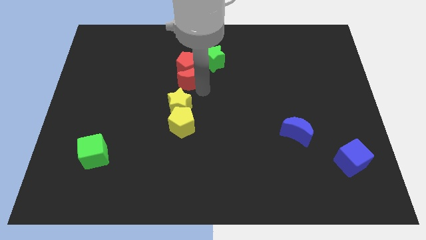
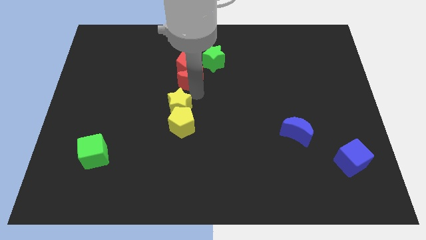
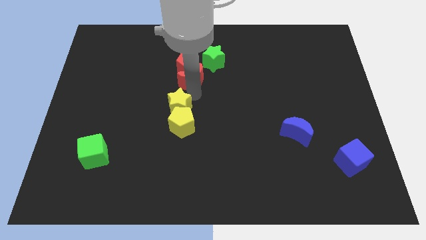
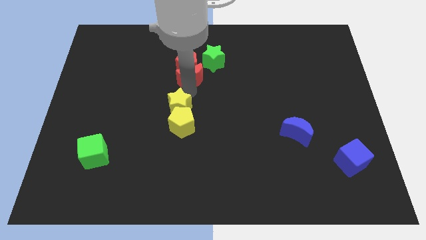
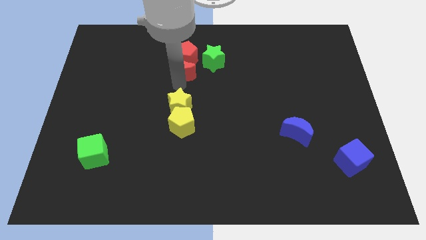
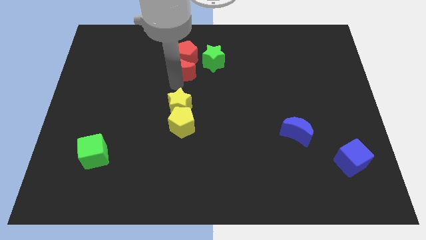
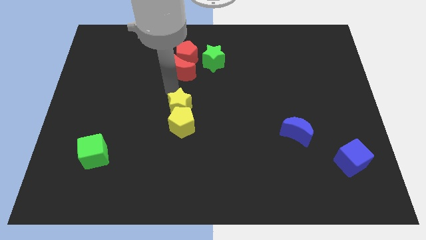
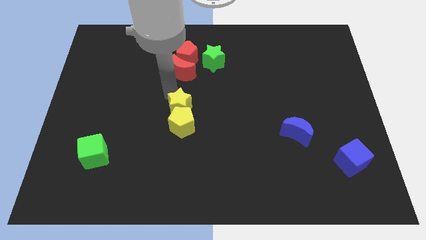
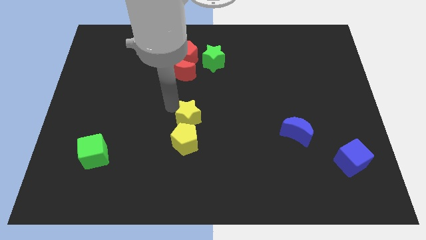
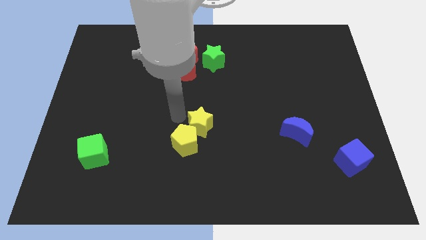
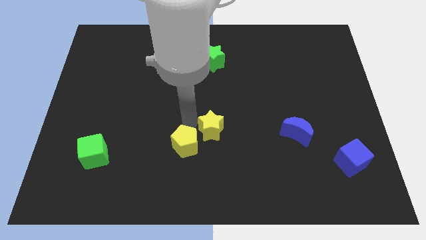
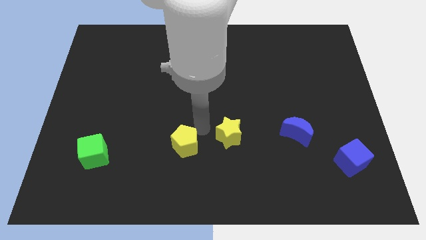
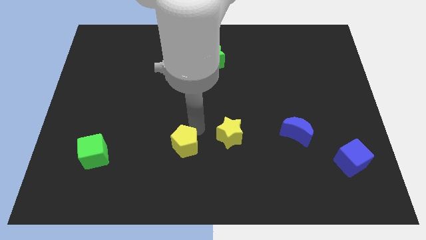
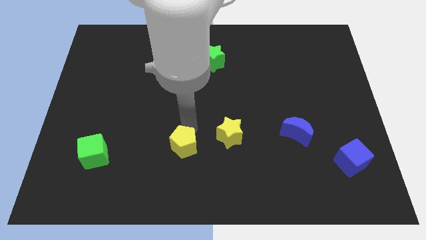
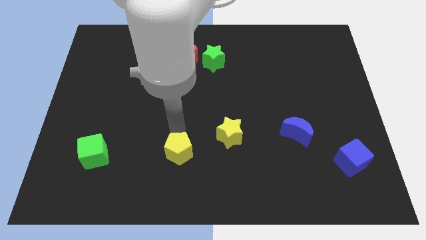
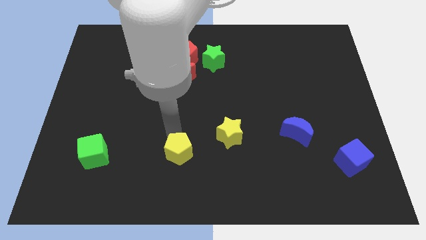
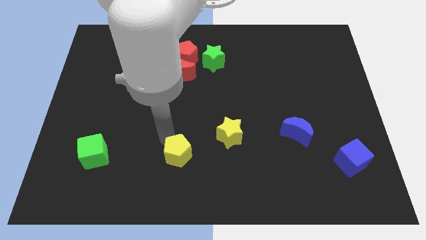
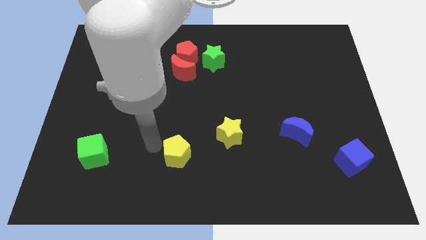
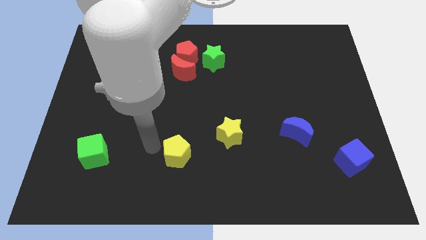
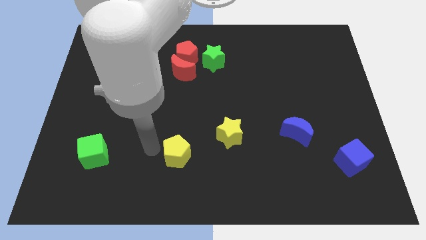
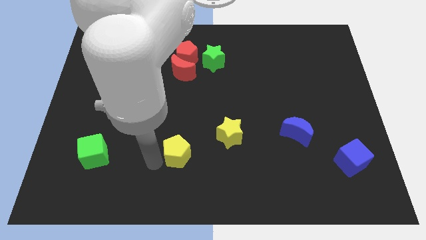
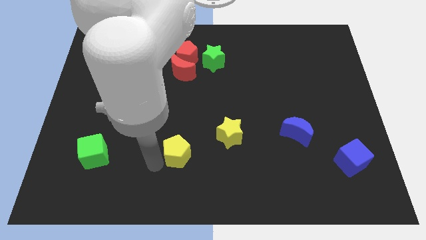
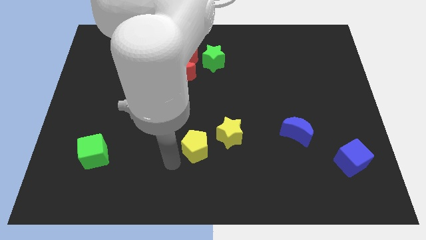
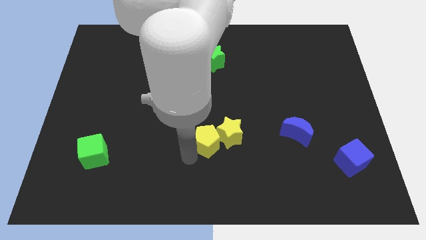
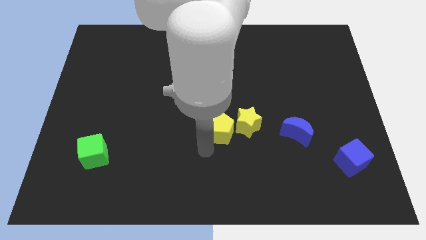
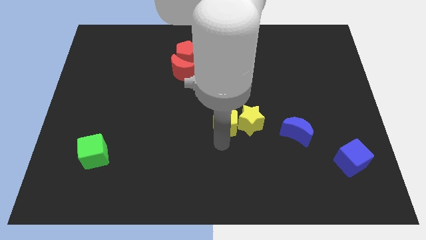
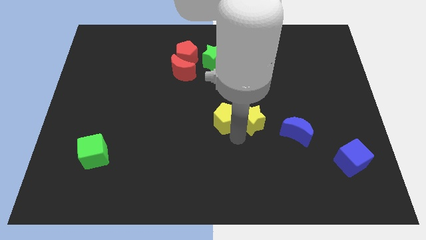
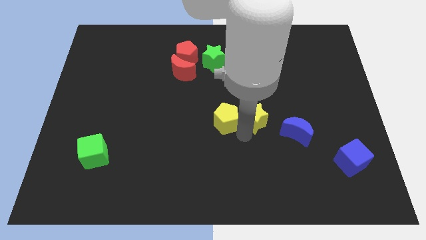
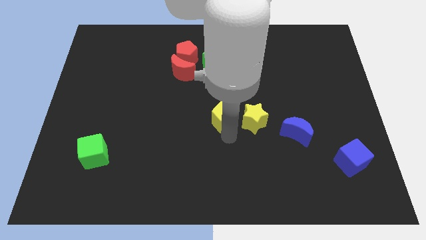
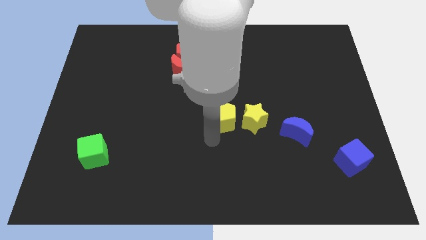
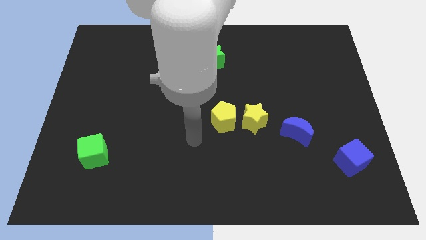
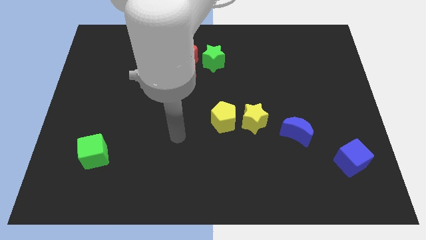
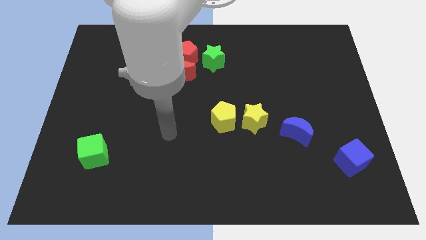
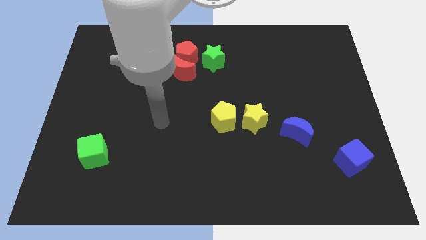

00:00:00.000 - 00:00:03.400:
separate the yellow star from the yellow pentagon

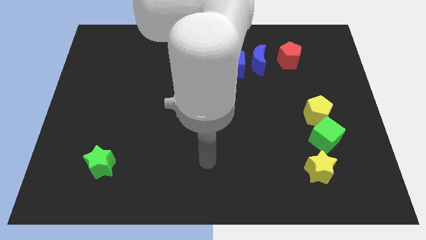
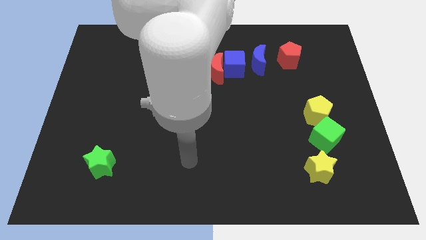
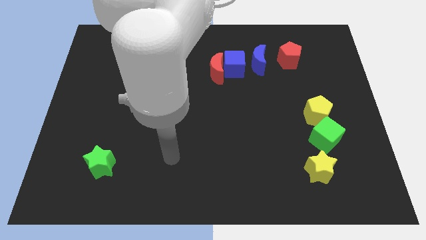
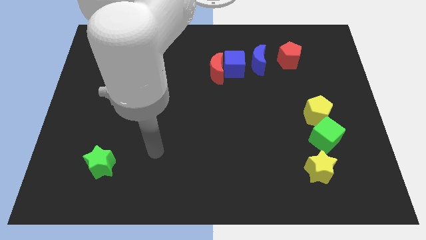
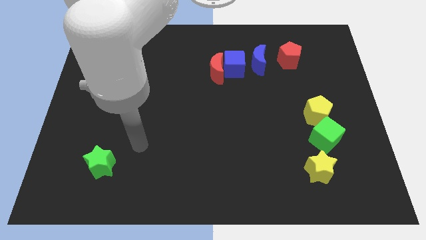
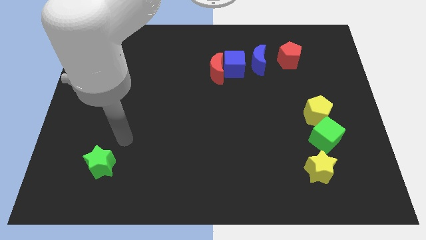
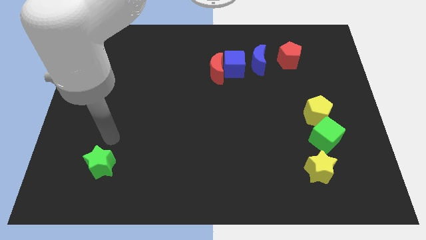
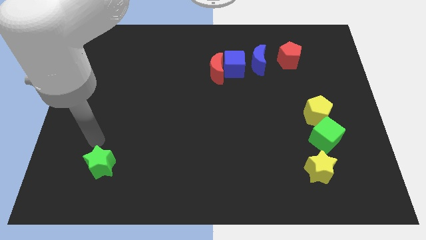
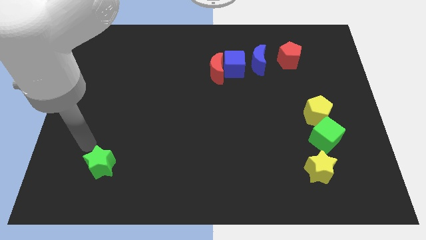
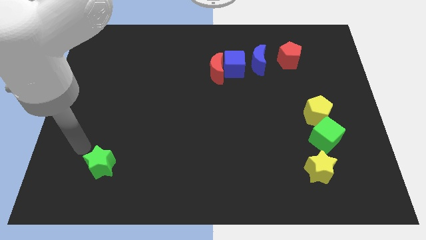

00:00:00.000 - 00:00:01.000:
place the arm on top of the green star

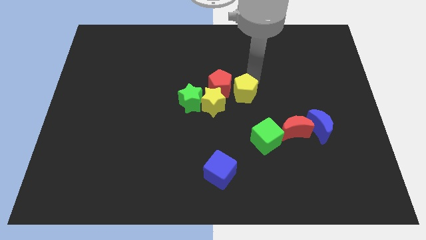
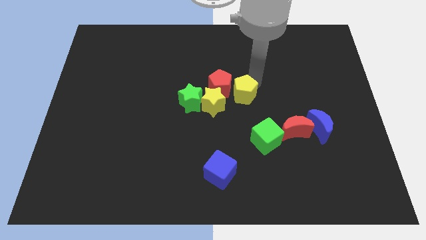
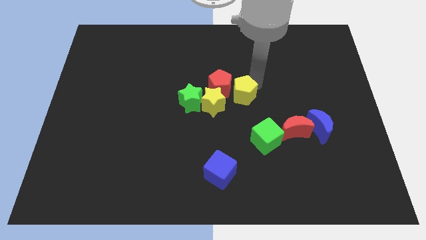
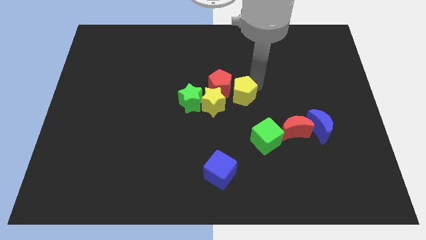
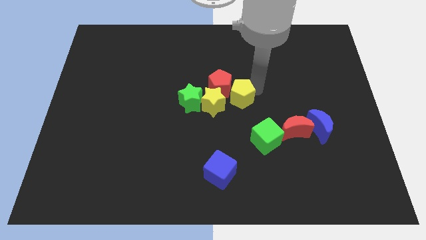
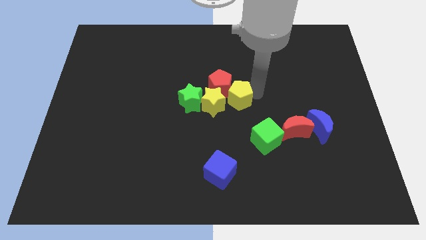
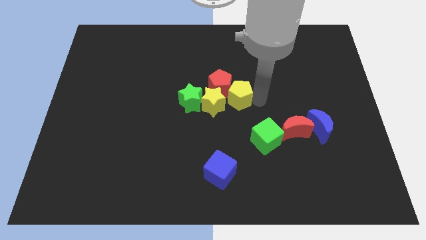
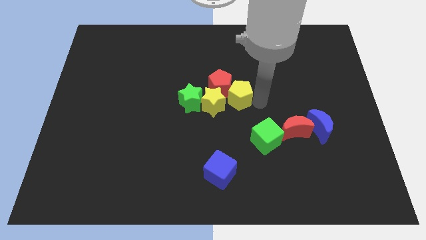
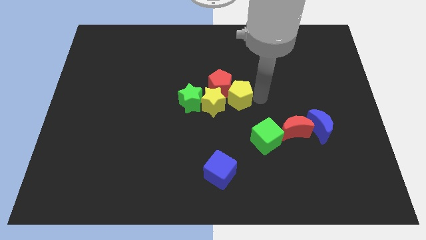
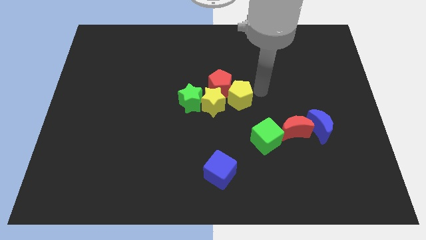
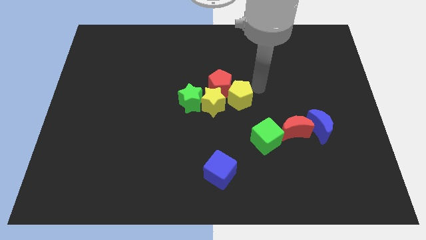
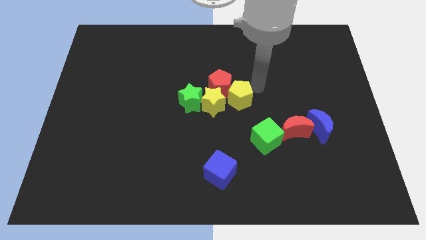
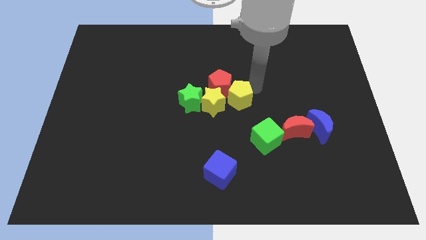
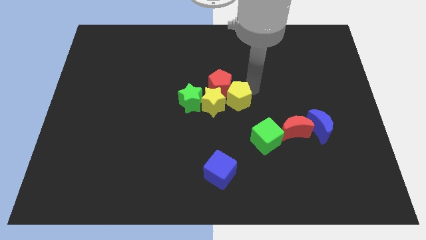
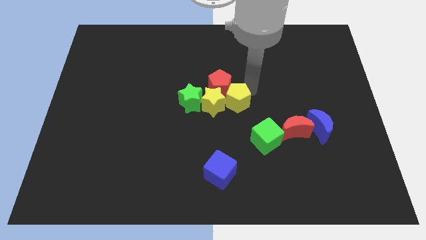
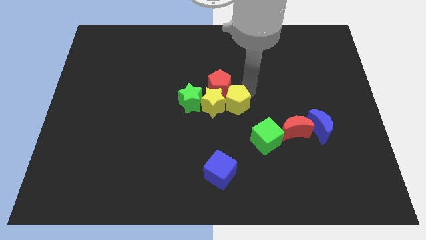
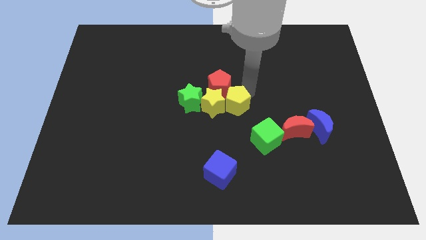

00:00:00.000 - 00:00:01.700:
push the yellow pentagon to the right of the yellow star

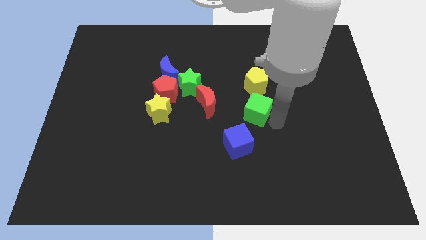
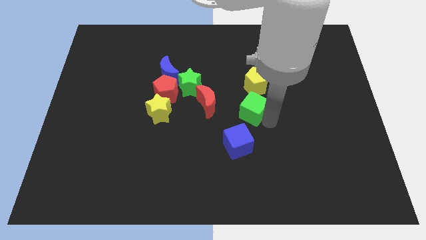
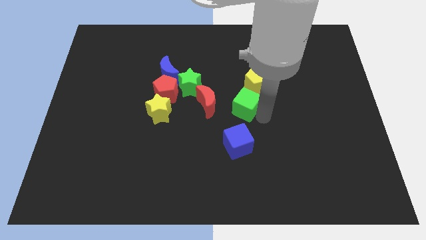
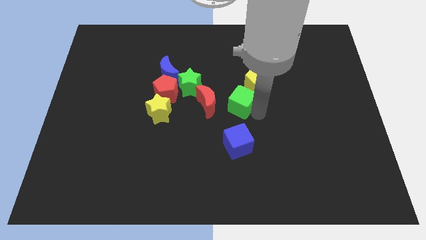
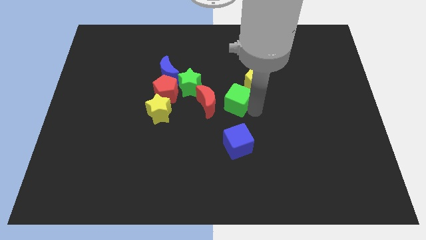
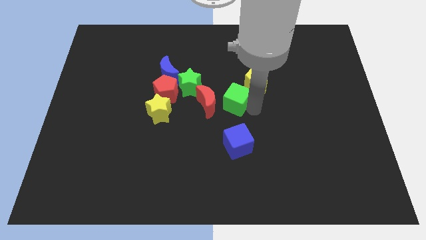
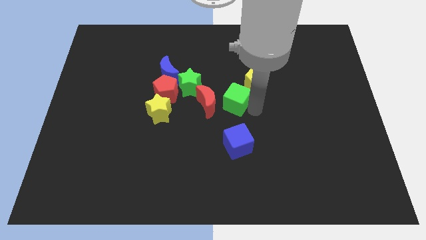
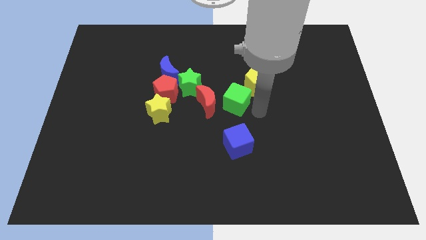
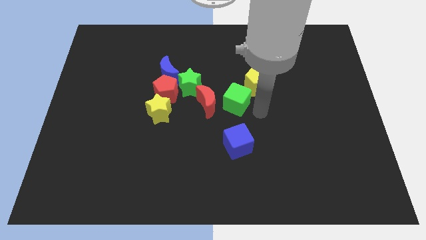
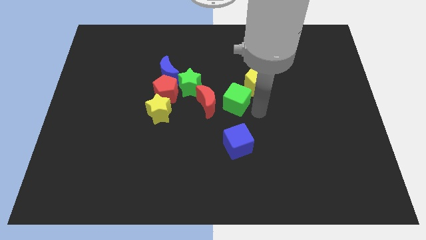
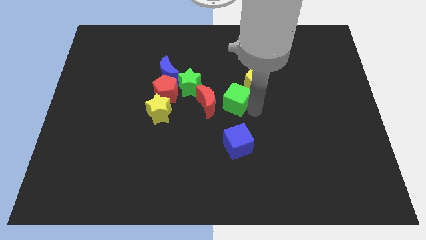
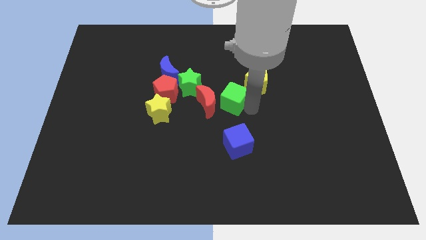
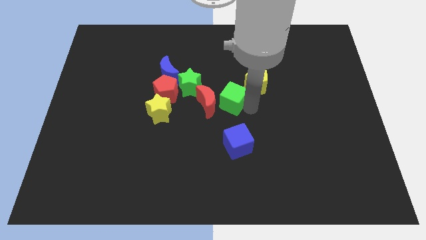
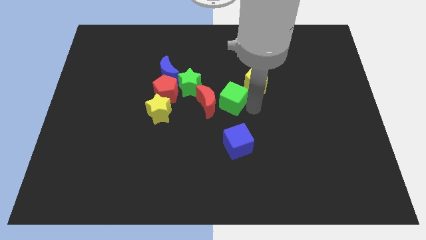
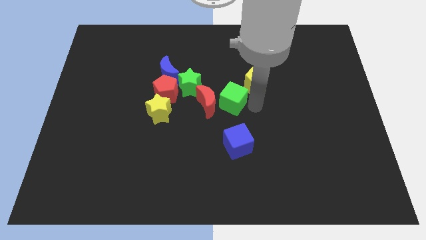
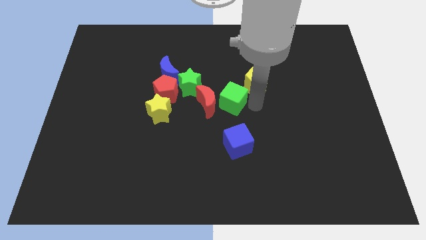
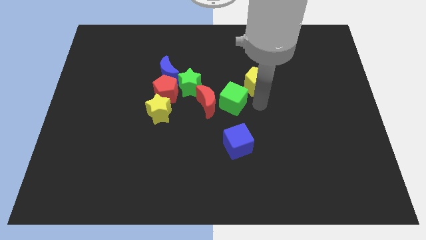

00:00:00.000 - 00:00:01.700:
place green cube in between the red crescent and yellow pentagon

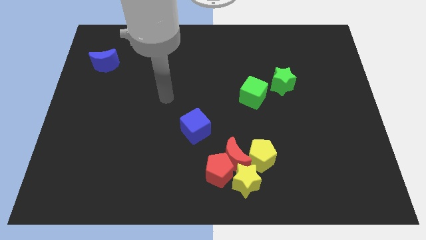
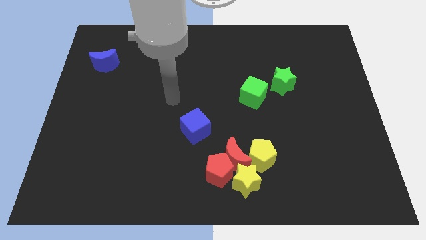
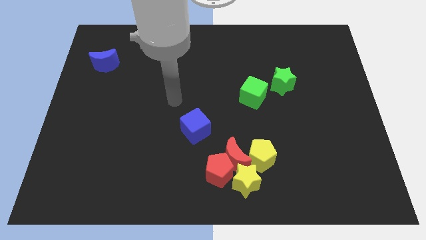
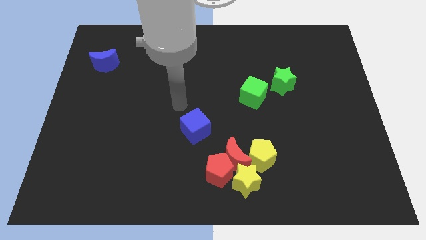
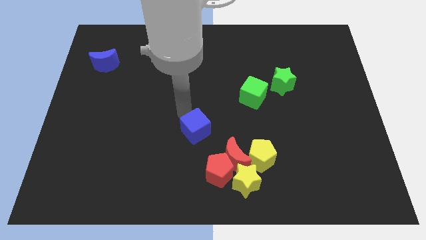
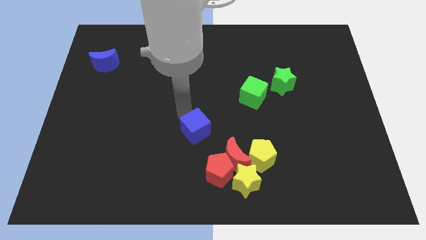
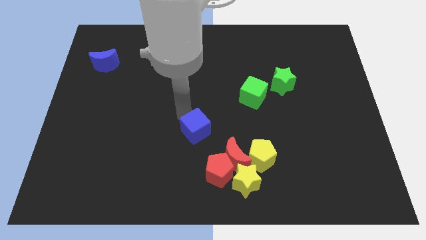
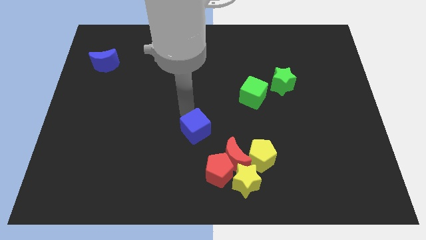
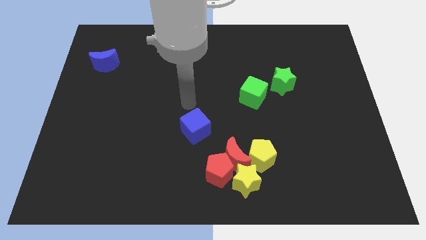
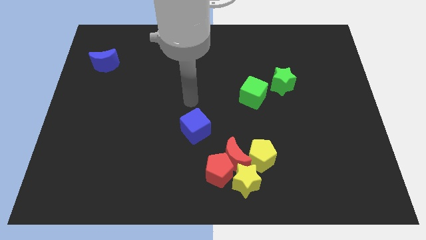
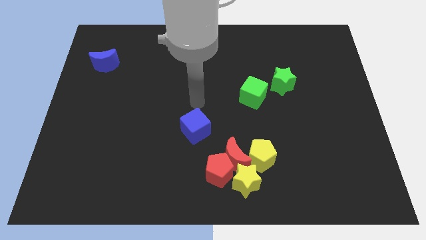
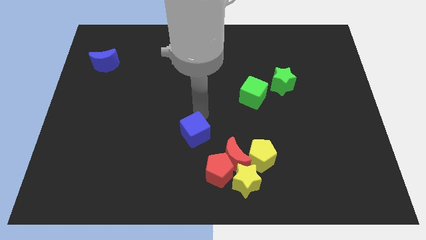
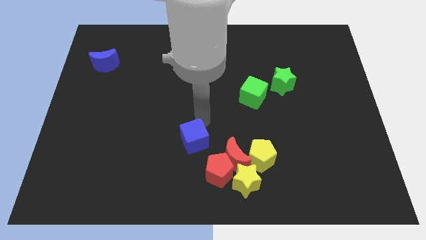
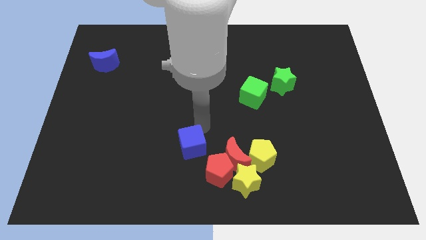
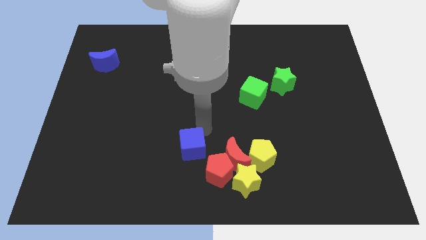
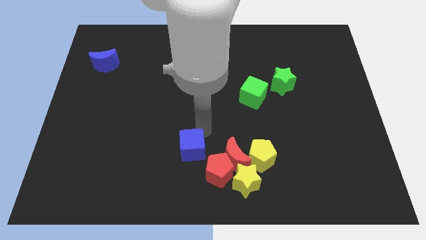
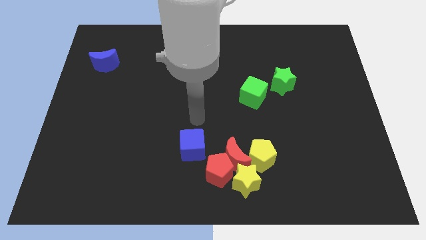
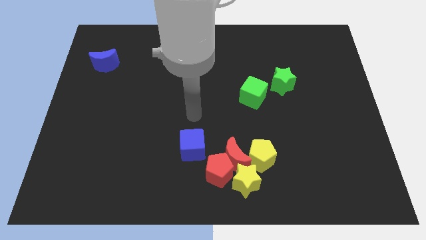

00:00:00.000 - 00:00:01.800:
push the blue cube towards the bottom of the board
